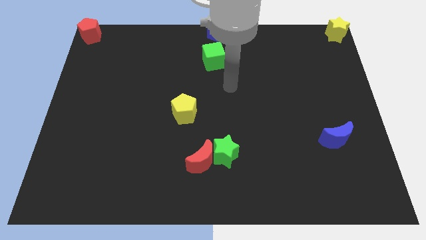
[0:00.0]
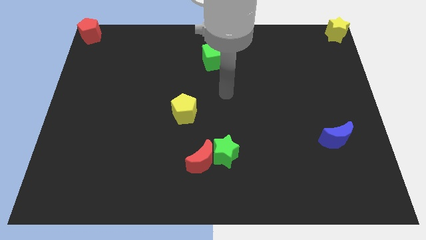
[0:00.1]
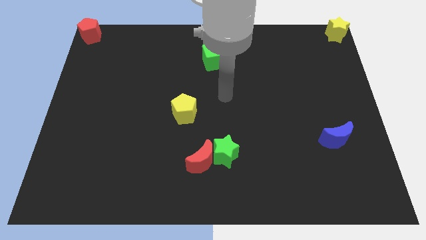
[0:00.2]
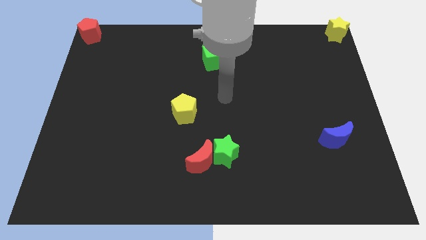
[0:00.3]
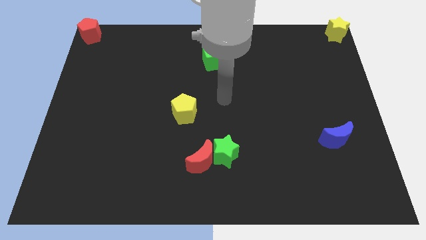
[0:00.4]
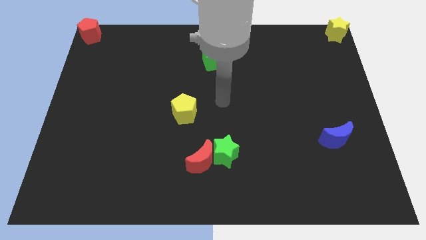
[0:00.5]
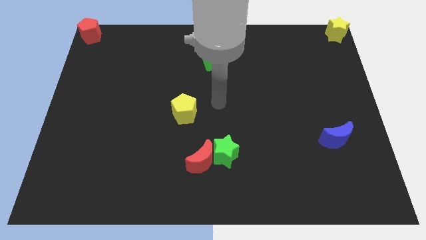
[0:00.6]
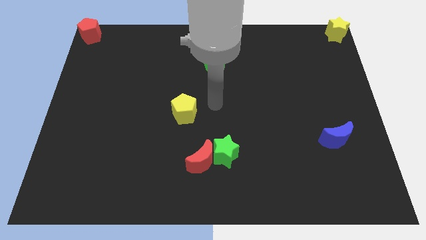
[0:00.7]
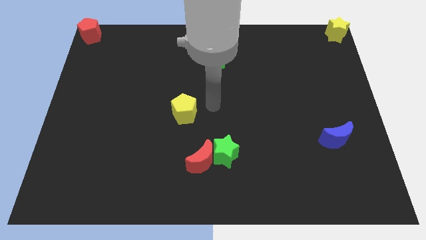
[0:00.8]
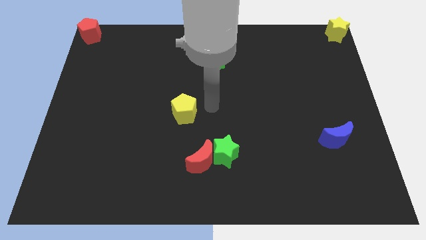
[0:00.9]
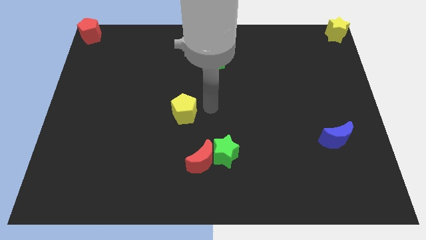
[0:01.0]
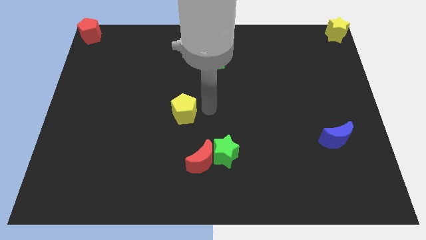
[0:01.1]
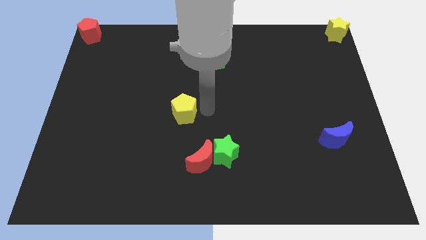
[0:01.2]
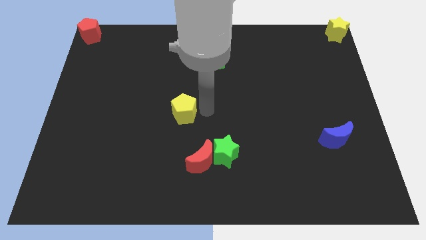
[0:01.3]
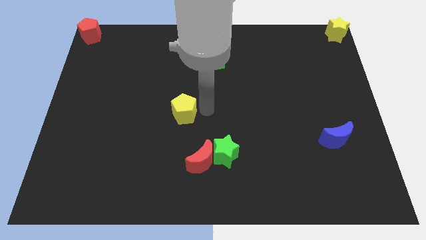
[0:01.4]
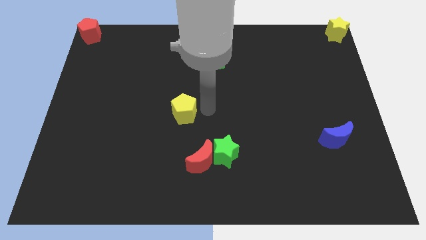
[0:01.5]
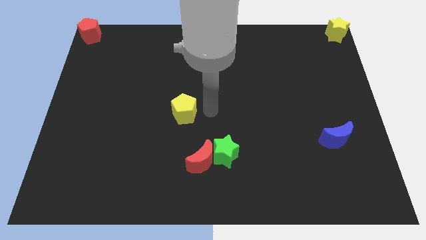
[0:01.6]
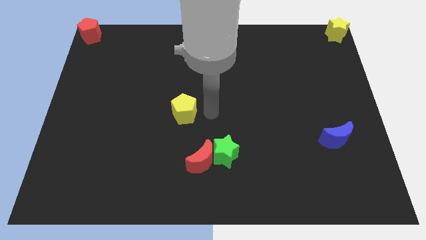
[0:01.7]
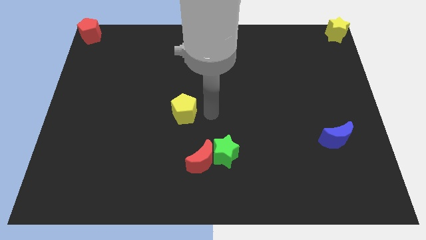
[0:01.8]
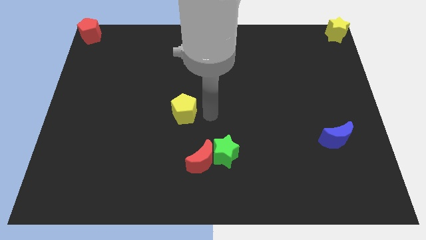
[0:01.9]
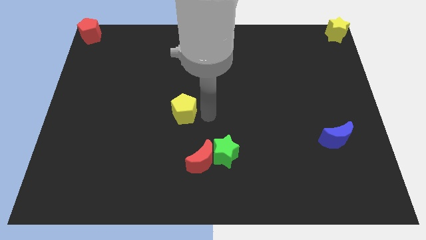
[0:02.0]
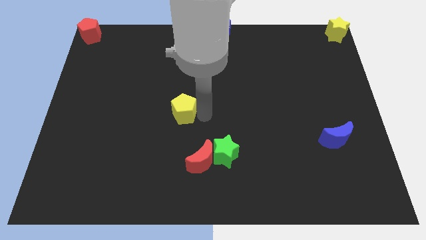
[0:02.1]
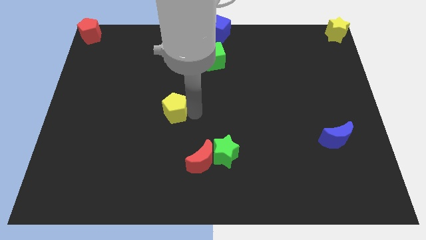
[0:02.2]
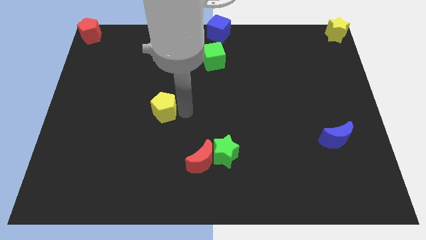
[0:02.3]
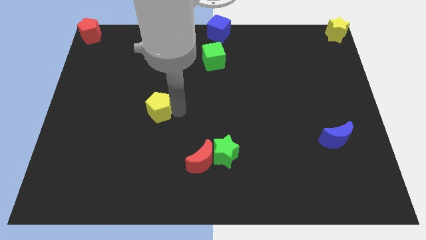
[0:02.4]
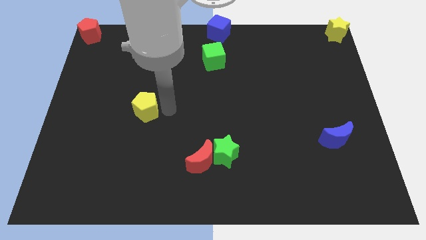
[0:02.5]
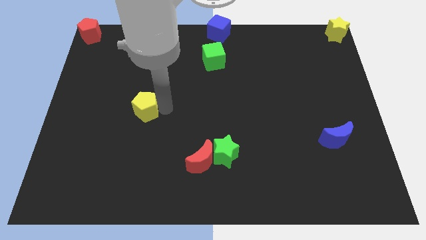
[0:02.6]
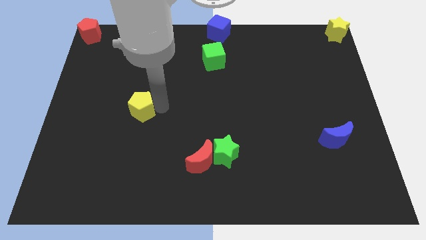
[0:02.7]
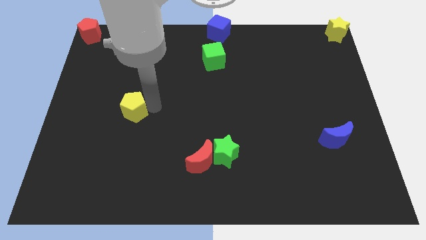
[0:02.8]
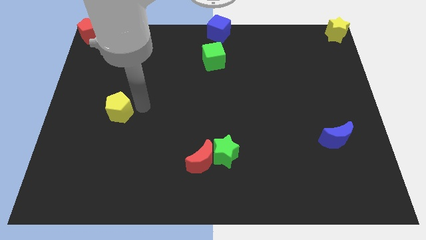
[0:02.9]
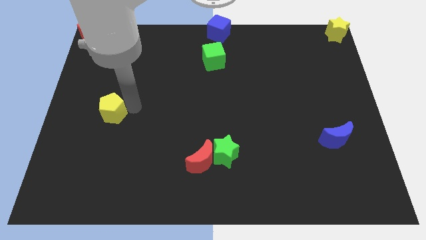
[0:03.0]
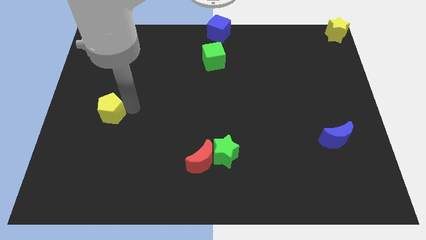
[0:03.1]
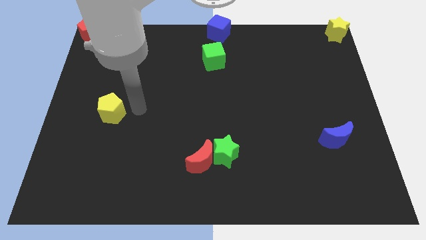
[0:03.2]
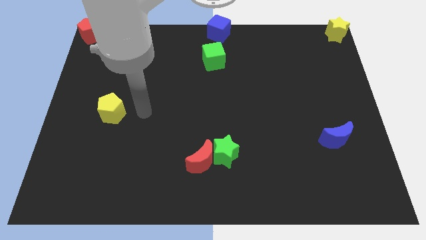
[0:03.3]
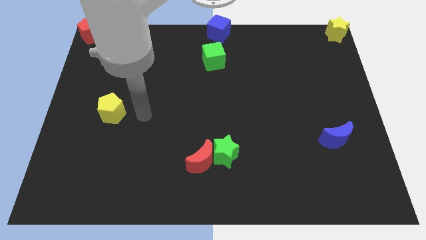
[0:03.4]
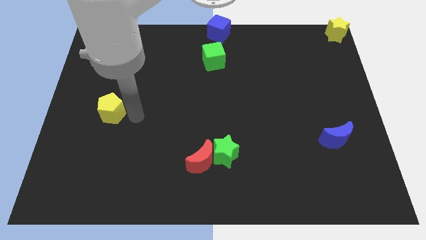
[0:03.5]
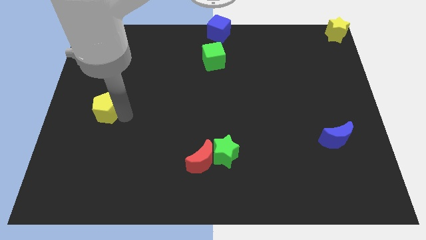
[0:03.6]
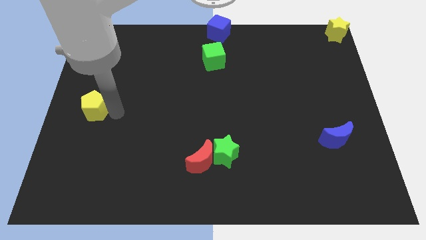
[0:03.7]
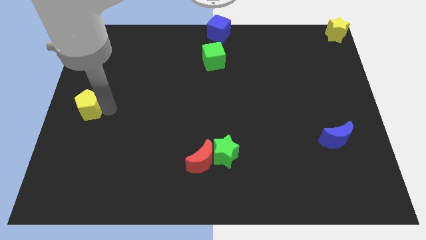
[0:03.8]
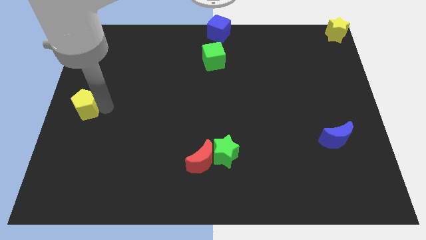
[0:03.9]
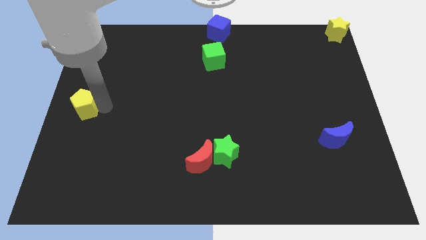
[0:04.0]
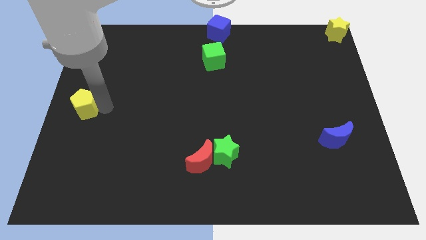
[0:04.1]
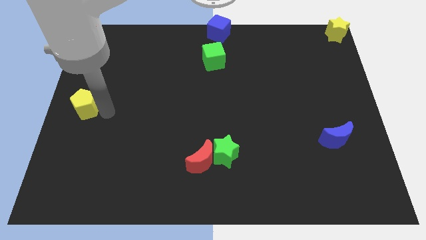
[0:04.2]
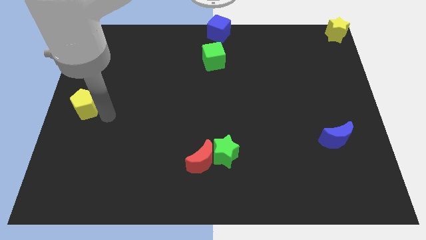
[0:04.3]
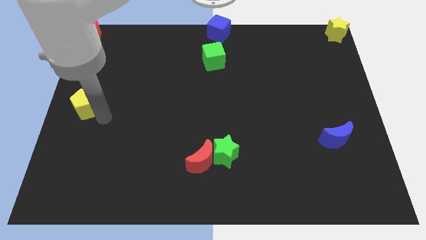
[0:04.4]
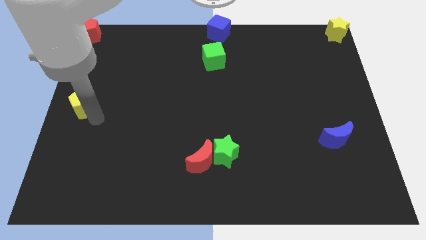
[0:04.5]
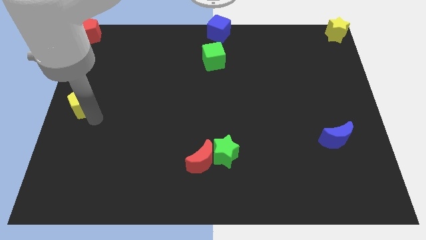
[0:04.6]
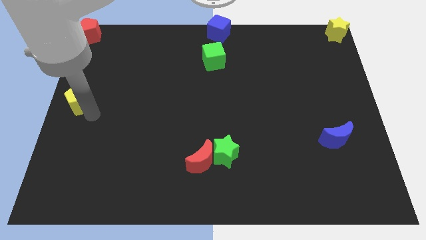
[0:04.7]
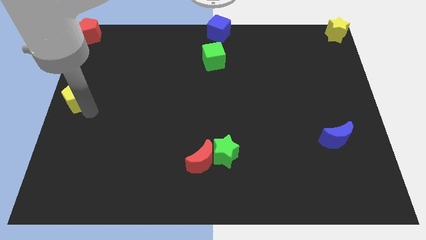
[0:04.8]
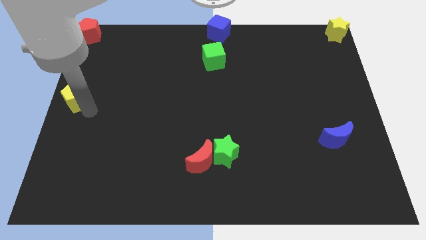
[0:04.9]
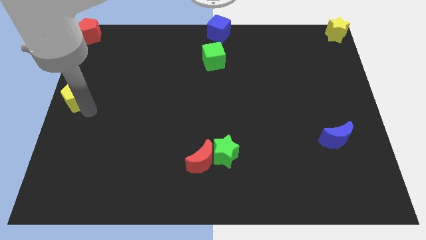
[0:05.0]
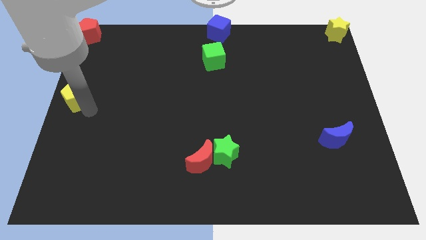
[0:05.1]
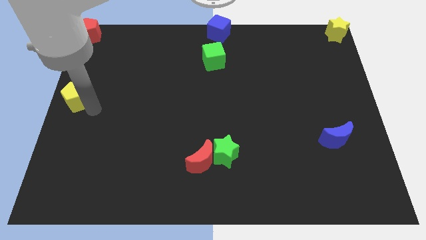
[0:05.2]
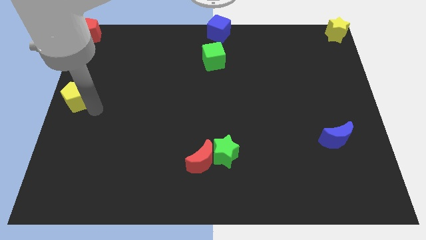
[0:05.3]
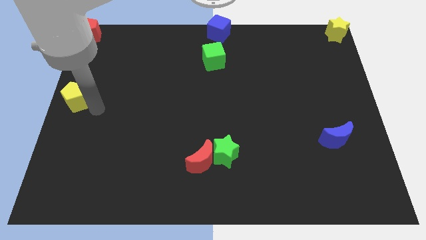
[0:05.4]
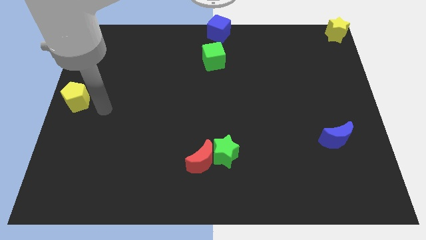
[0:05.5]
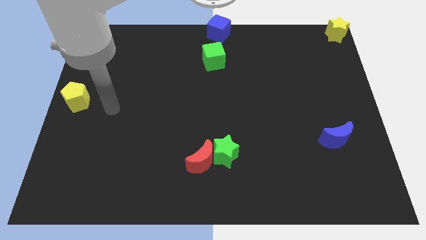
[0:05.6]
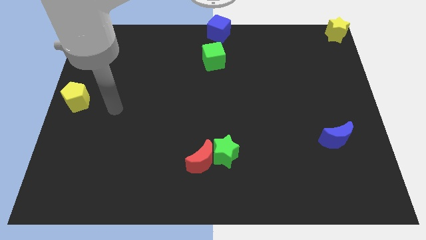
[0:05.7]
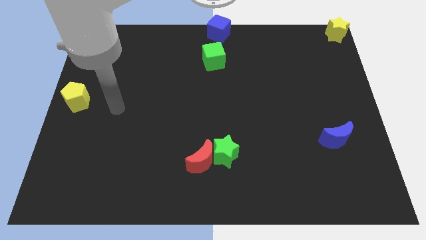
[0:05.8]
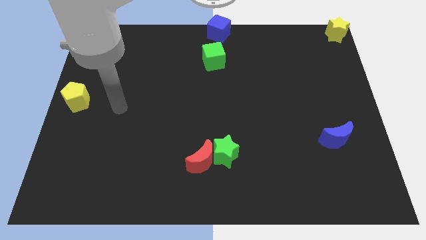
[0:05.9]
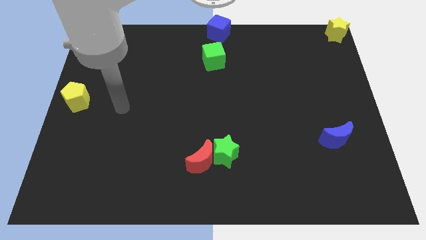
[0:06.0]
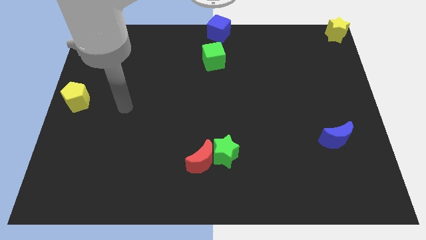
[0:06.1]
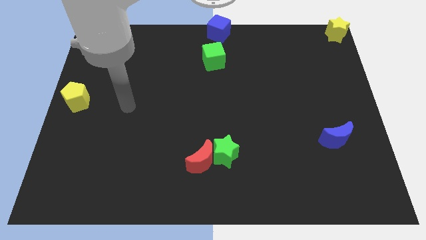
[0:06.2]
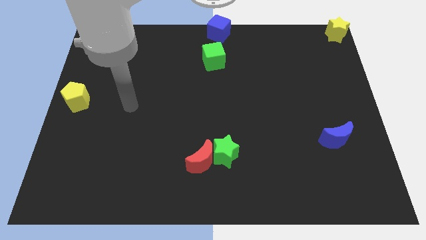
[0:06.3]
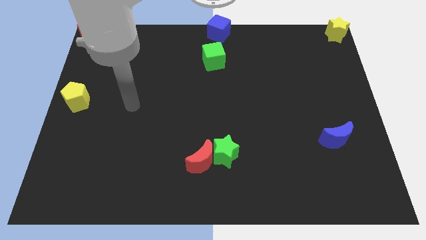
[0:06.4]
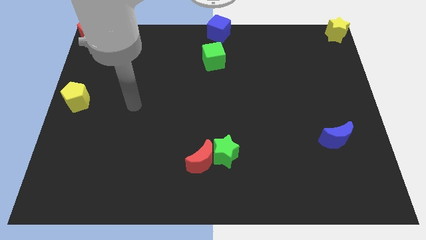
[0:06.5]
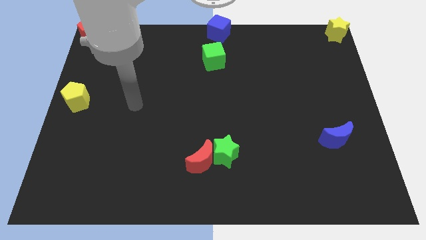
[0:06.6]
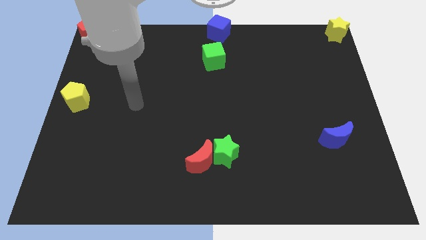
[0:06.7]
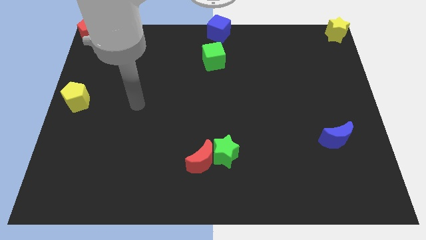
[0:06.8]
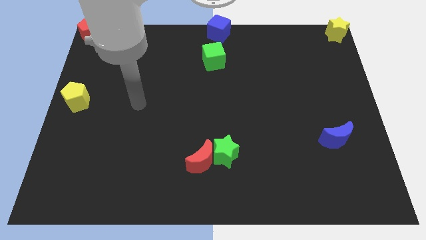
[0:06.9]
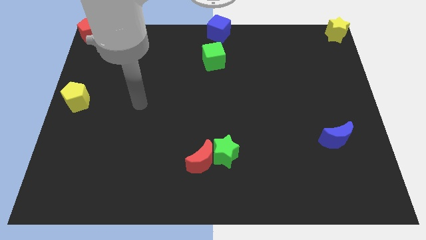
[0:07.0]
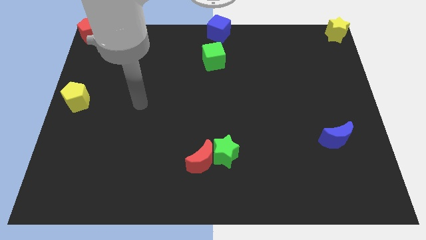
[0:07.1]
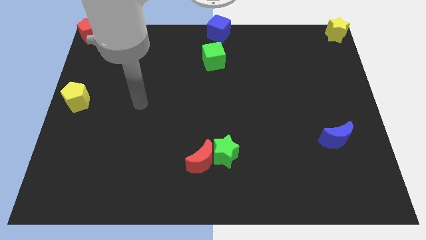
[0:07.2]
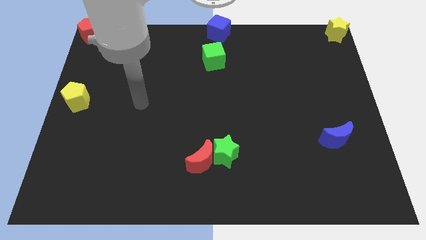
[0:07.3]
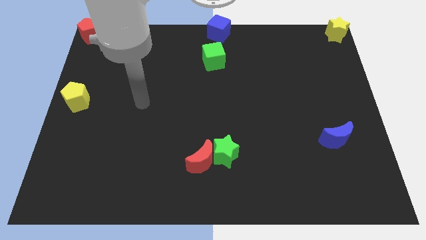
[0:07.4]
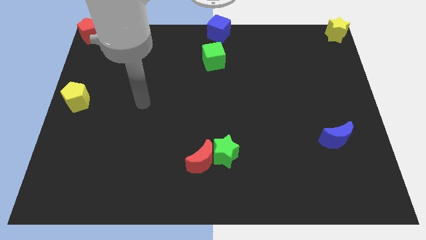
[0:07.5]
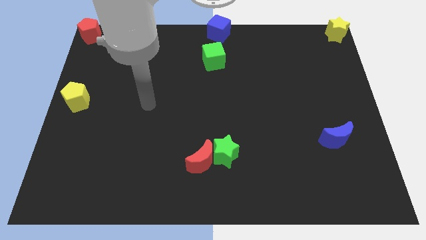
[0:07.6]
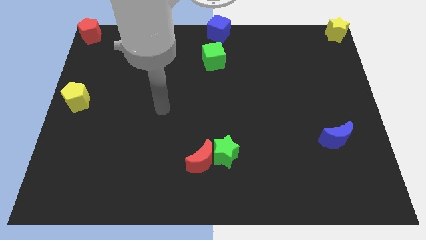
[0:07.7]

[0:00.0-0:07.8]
push the yellow pentagon towards the left center

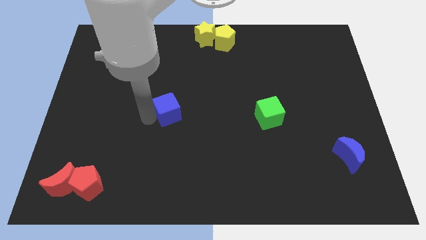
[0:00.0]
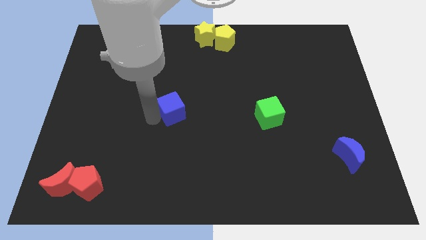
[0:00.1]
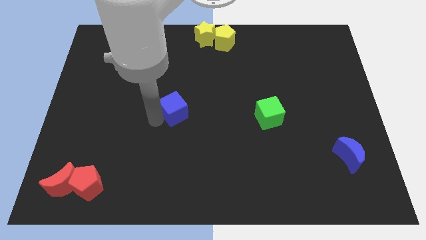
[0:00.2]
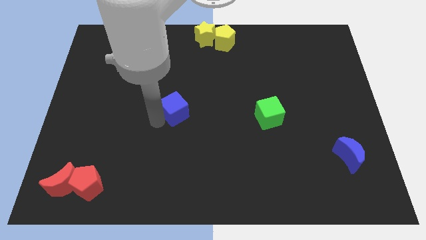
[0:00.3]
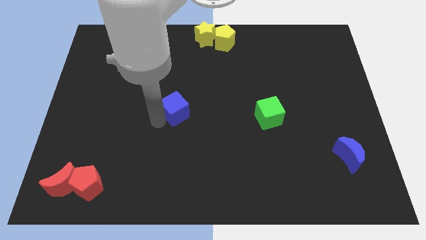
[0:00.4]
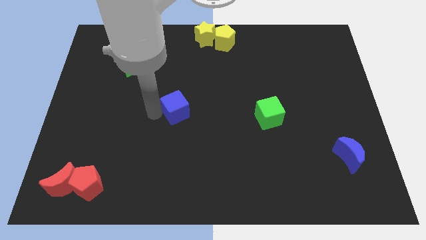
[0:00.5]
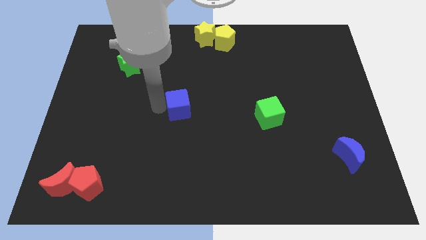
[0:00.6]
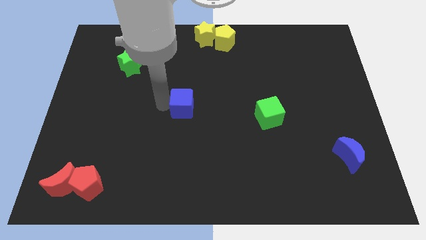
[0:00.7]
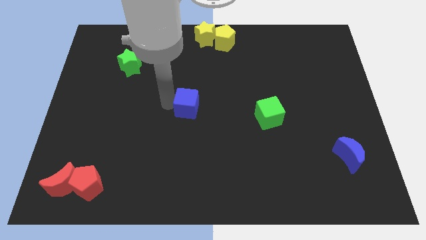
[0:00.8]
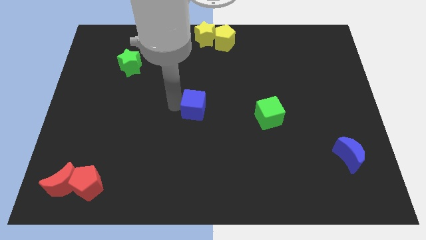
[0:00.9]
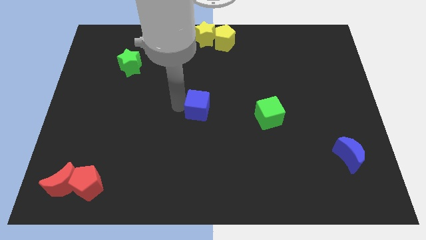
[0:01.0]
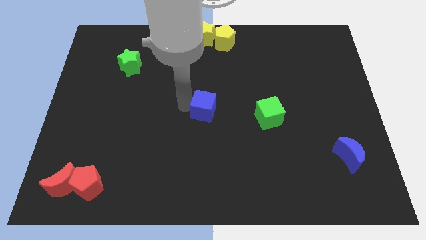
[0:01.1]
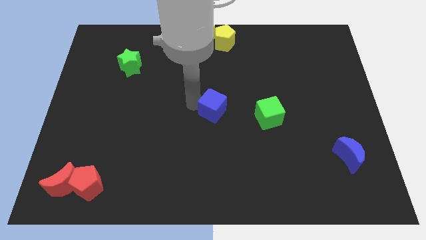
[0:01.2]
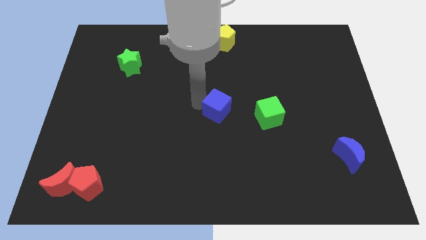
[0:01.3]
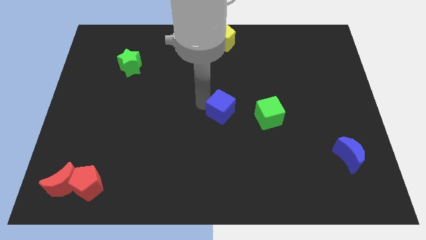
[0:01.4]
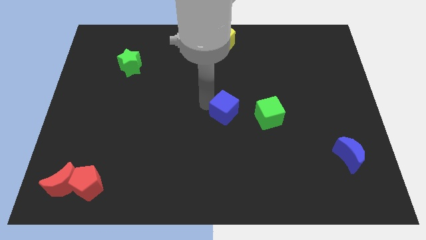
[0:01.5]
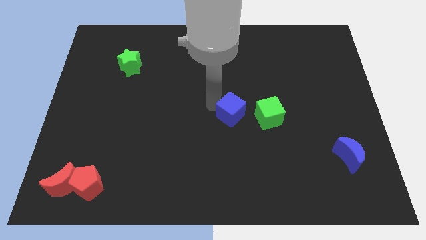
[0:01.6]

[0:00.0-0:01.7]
push blue cube below yellow pentagon
